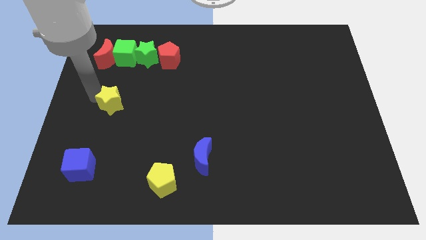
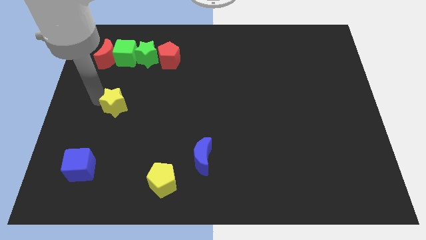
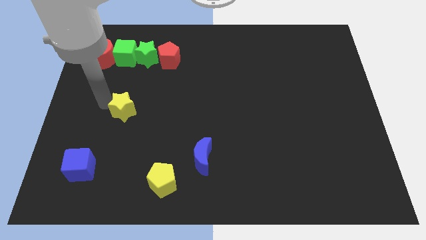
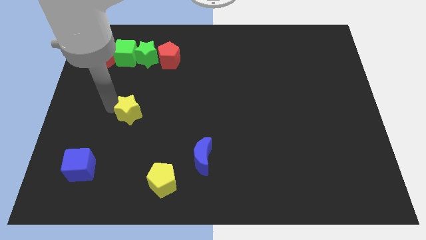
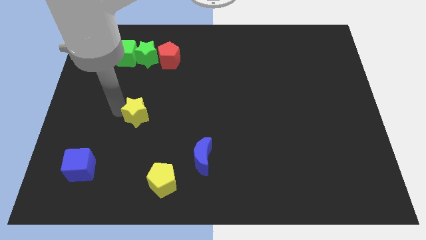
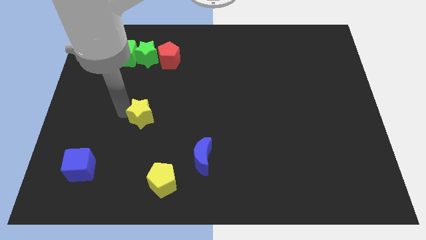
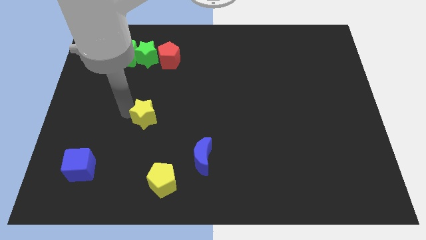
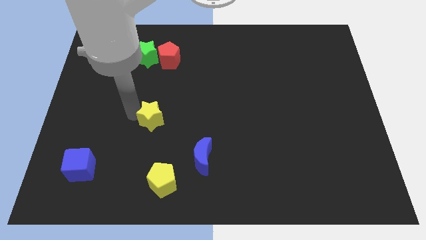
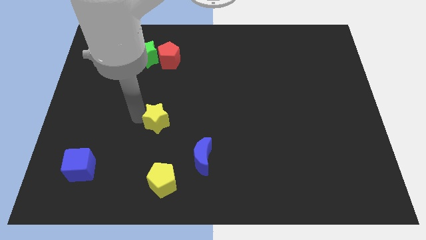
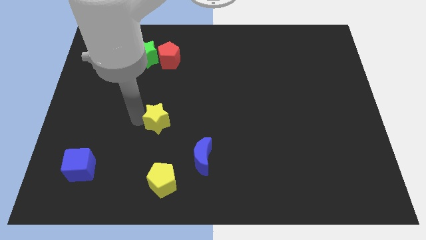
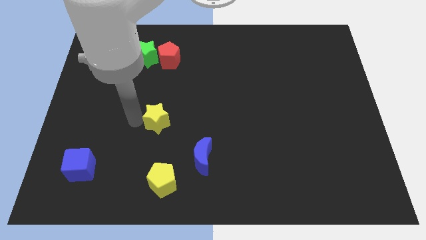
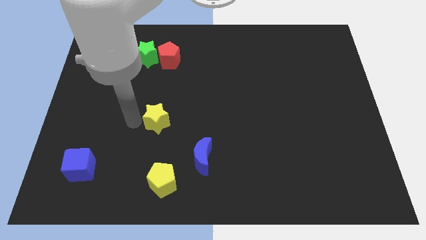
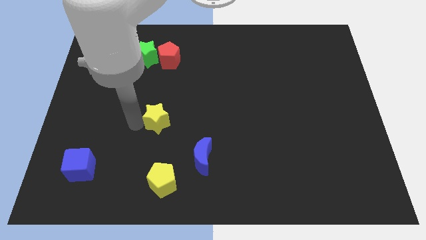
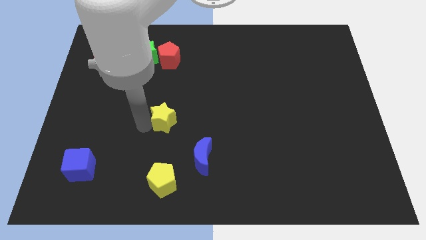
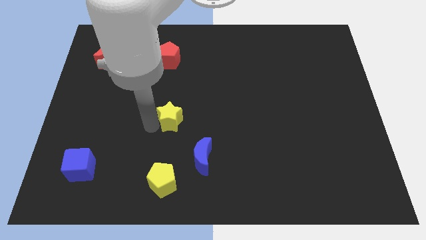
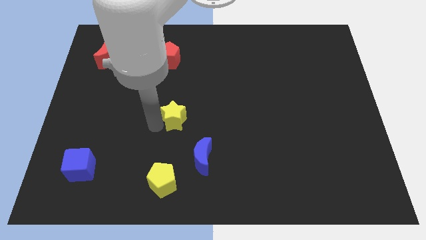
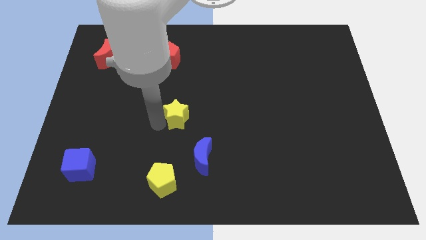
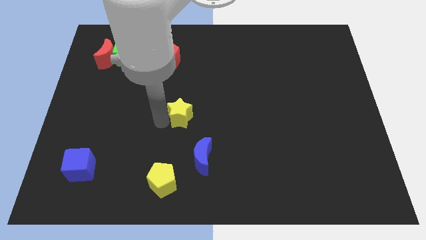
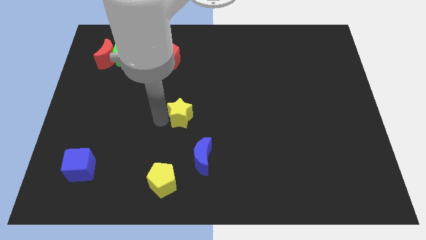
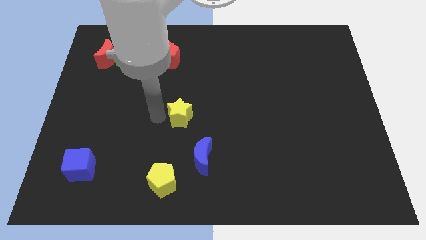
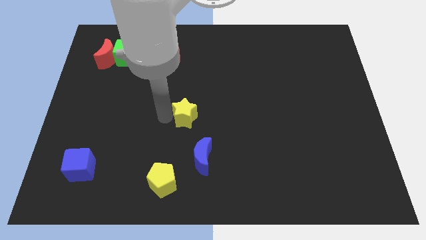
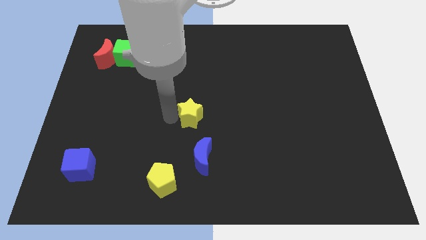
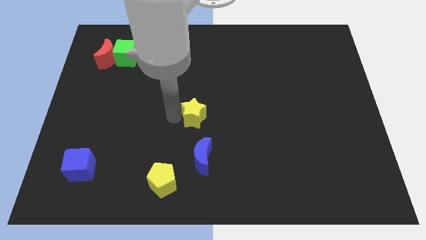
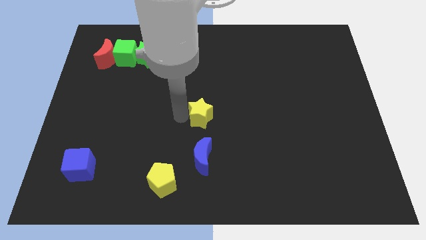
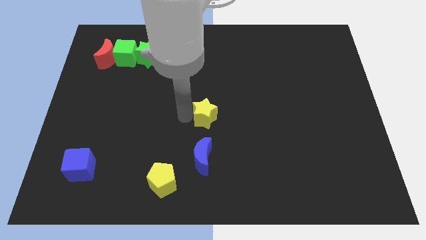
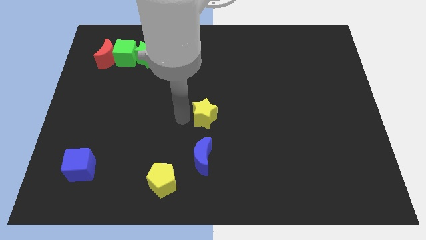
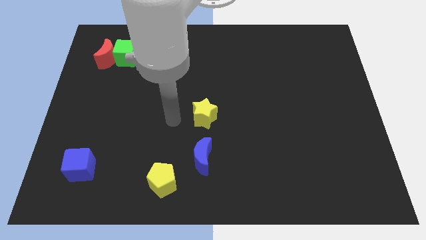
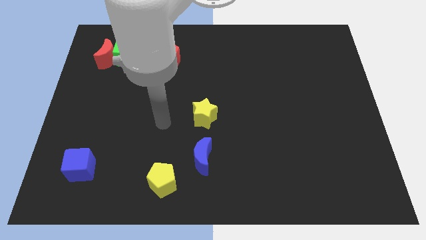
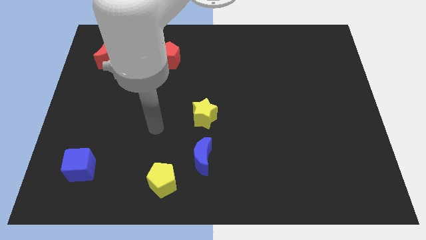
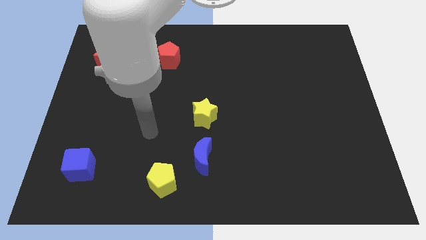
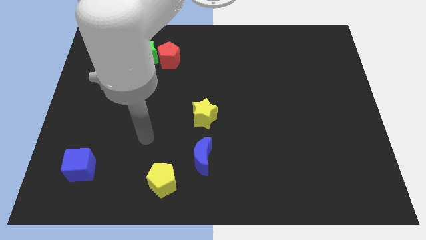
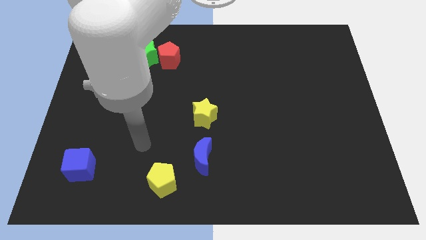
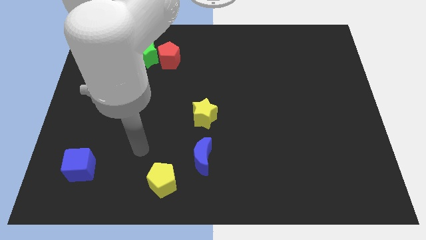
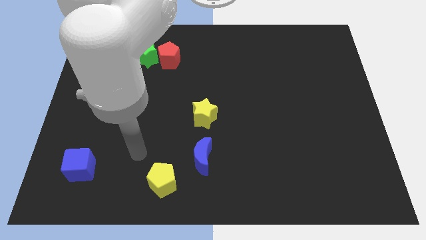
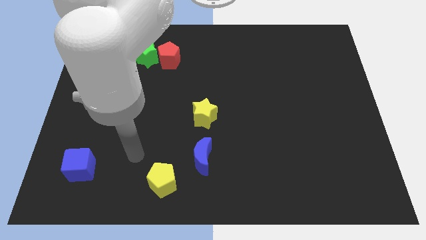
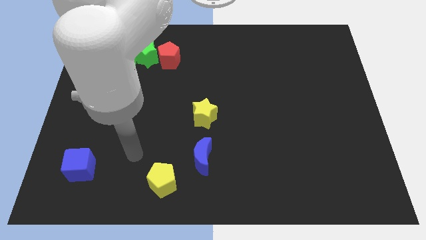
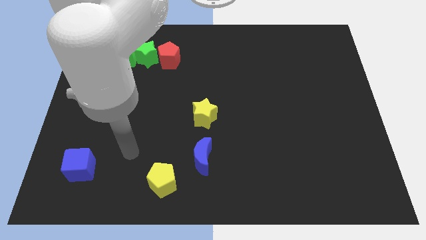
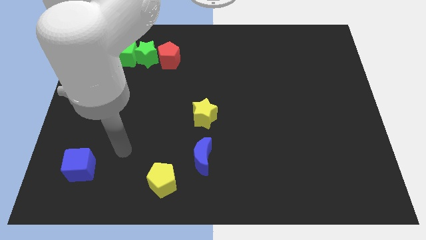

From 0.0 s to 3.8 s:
move the yellow star to top of the blue moon

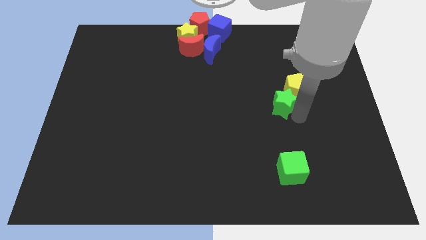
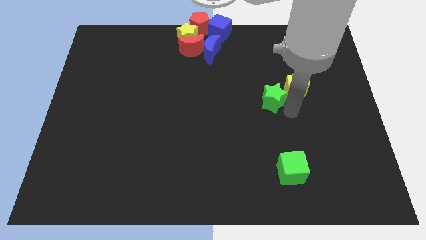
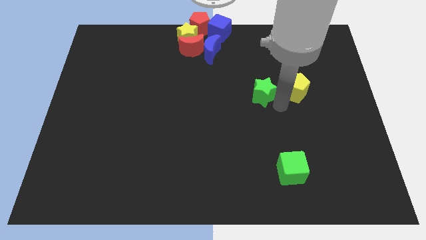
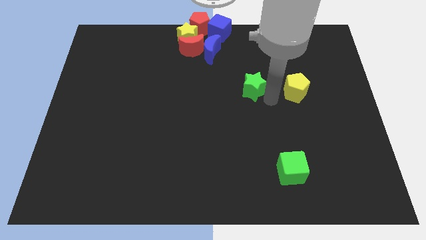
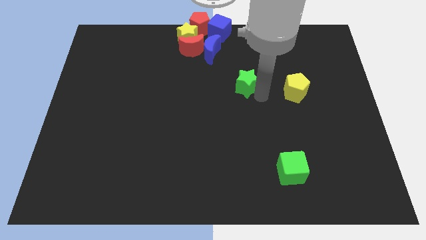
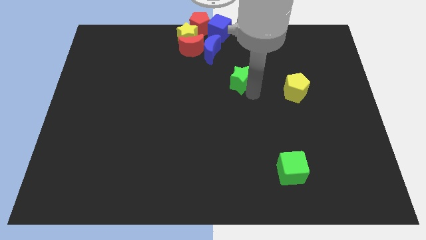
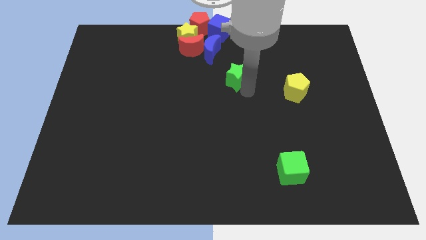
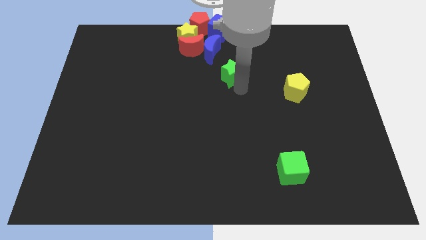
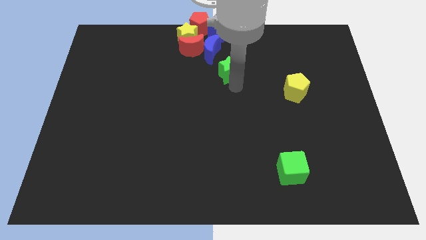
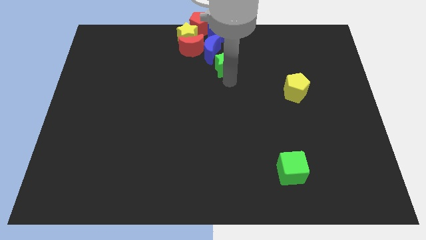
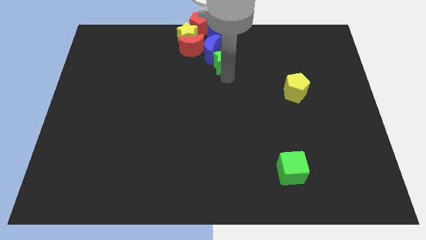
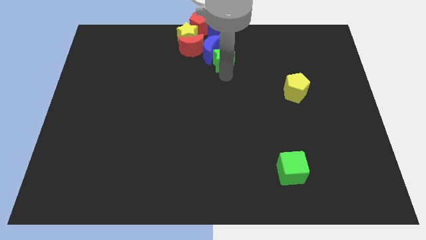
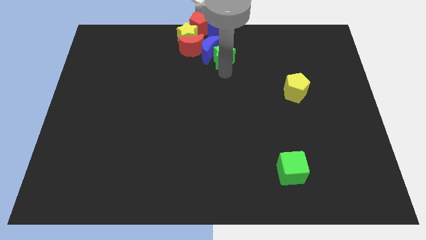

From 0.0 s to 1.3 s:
place the green star at the right of the blue crescent

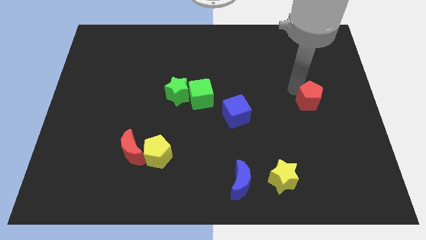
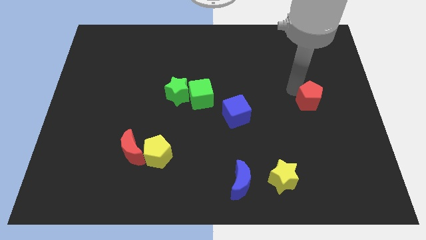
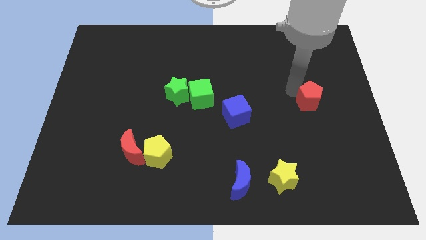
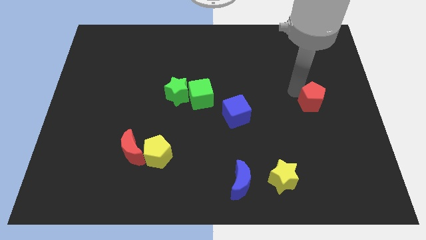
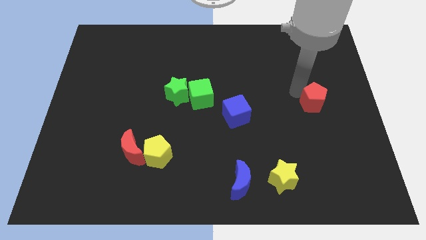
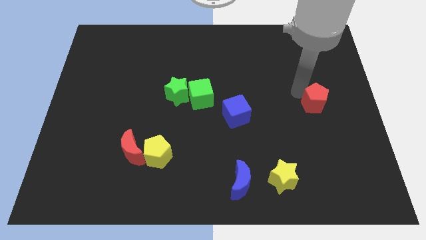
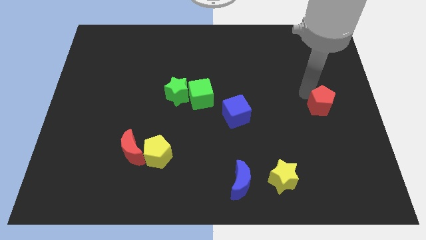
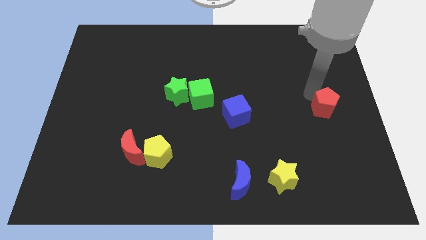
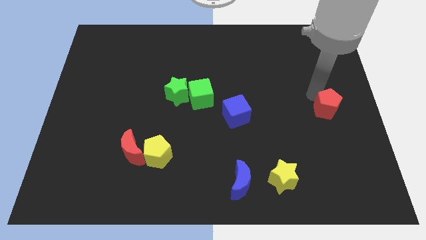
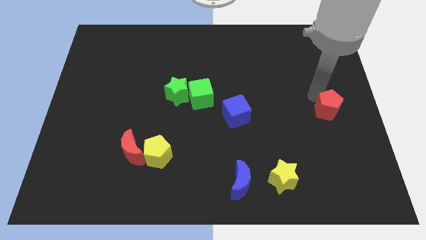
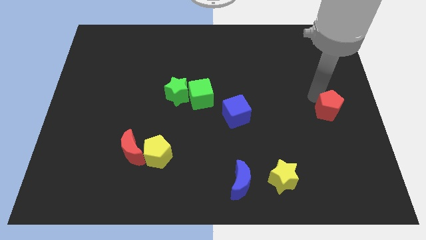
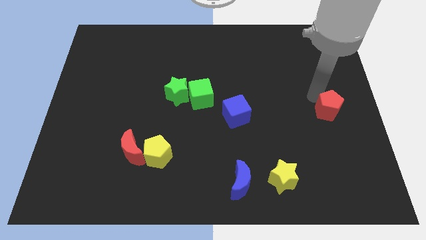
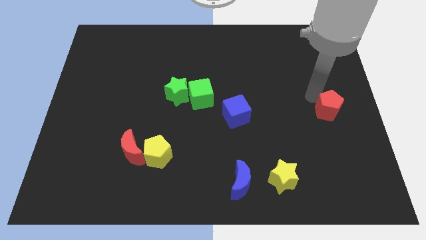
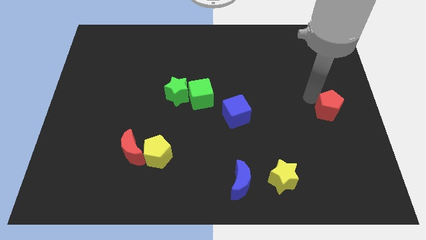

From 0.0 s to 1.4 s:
move red pentagon to the right of blue cube

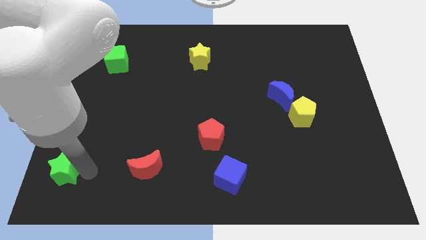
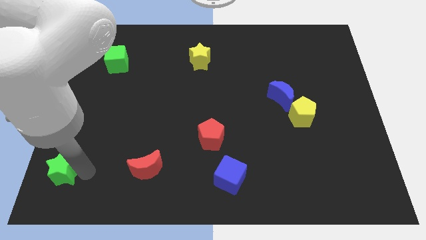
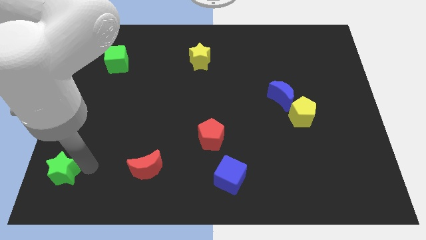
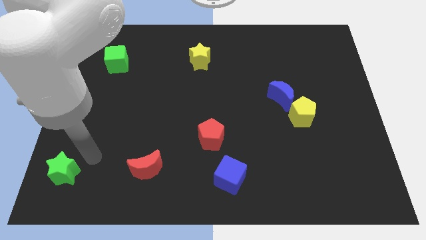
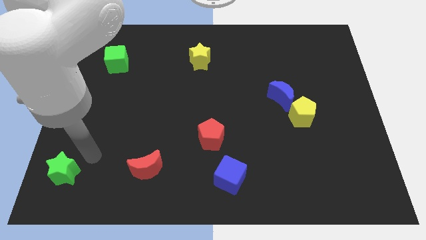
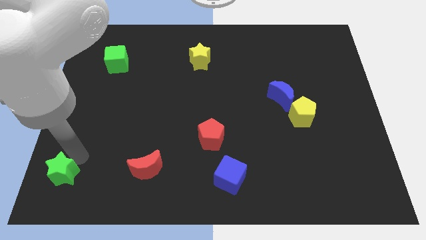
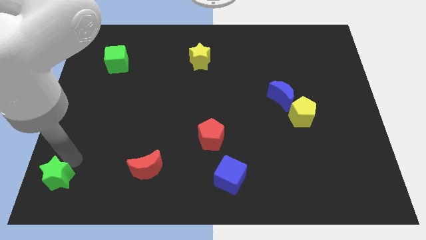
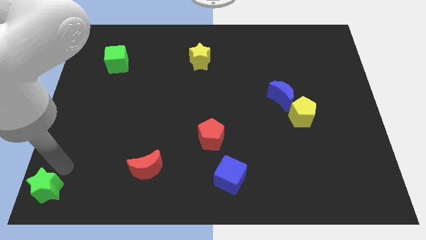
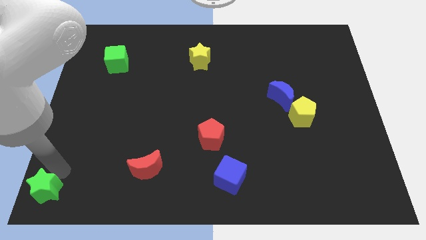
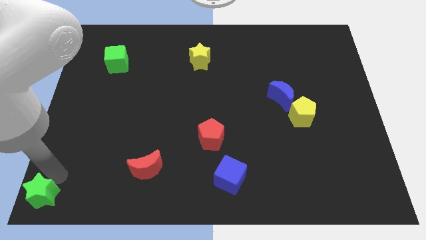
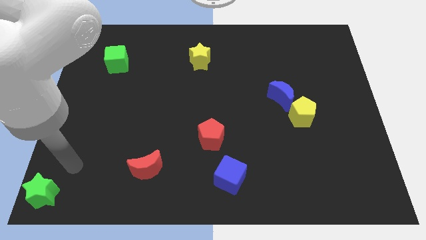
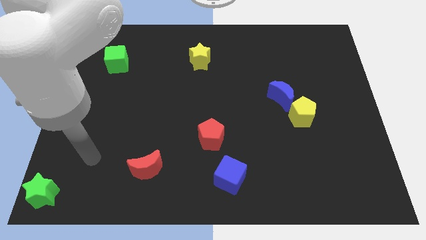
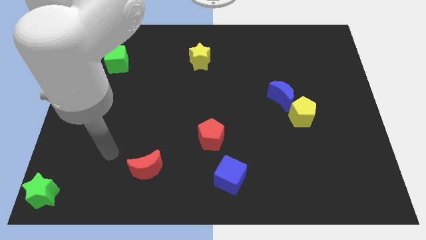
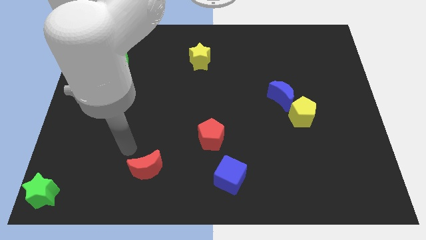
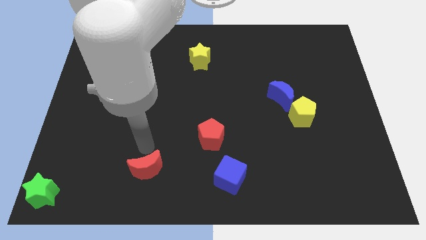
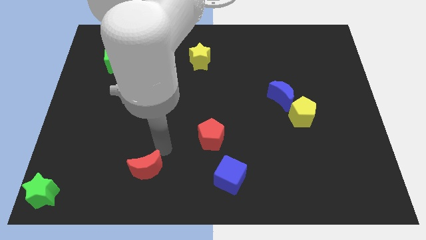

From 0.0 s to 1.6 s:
place green star to the bottom left of the board

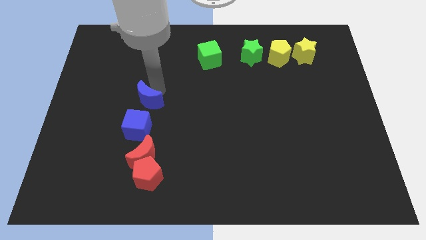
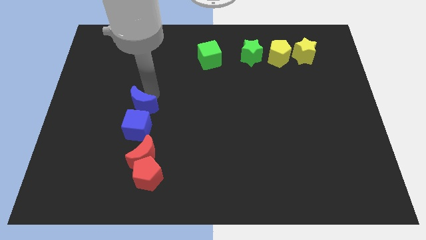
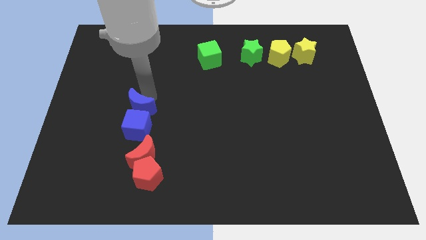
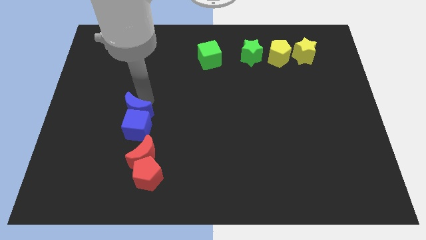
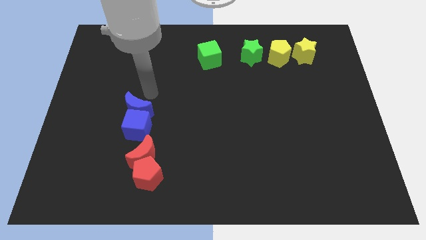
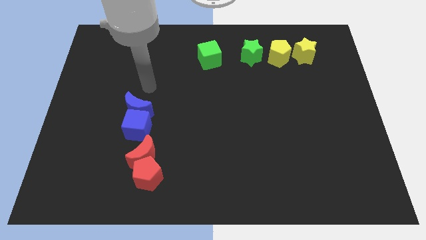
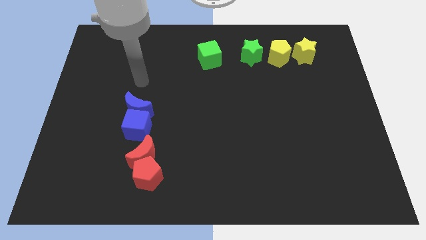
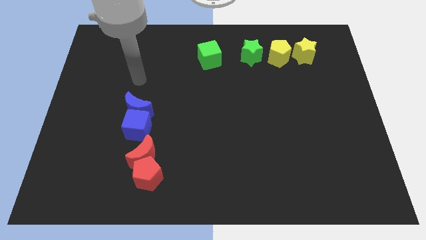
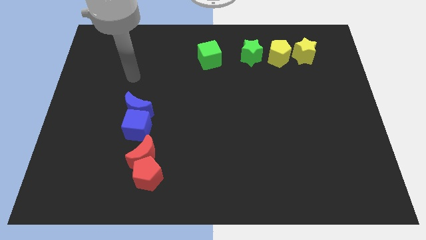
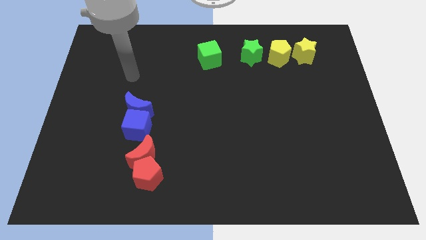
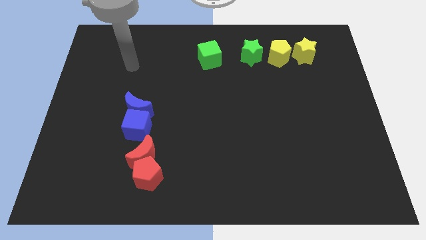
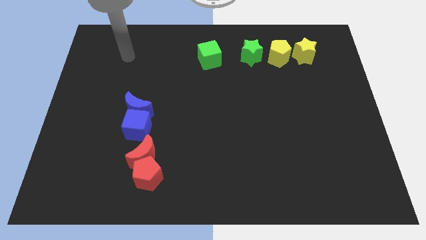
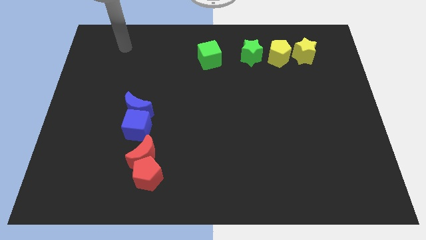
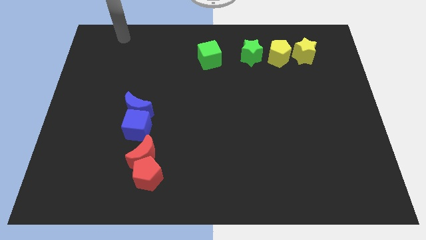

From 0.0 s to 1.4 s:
move your arm away from blue moon
